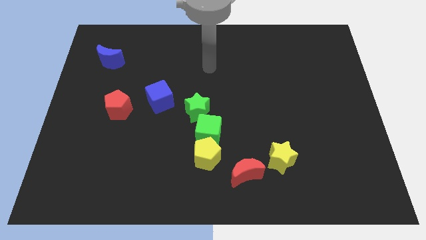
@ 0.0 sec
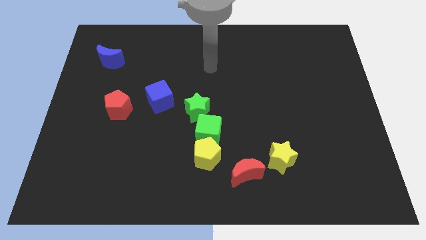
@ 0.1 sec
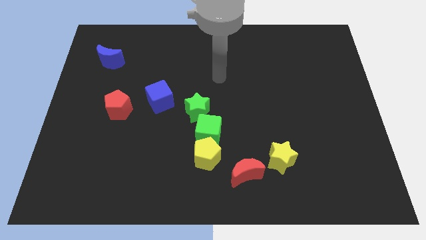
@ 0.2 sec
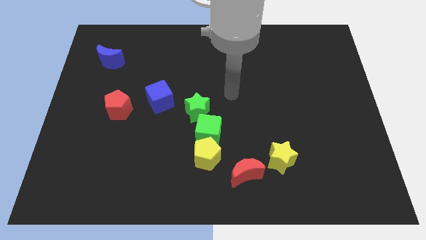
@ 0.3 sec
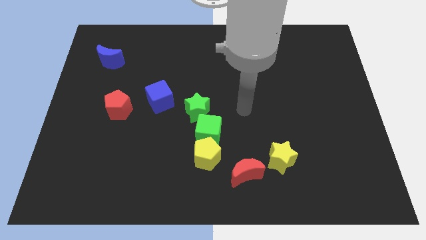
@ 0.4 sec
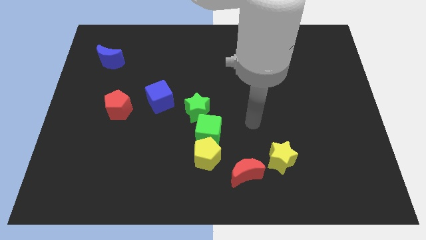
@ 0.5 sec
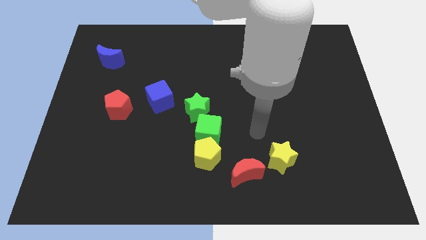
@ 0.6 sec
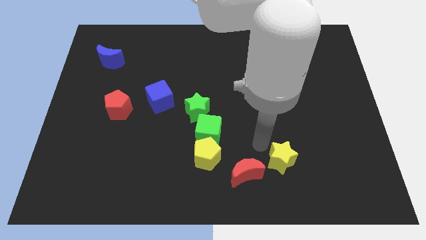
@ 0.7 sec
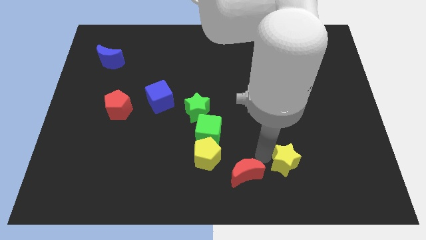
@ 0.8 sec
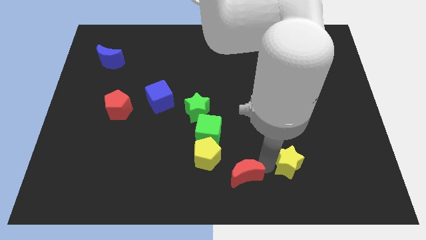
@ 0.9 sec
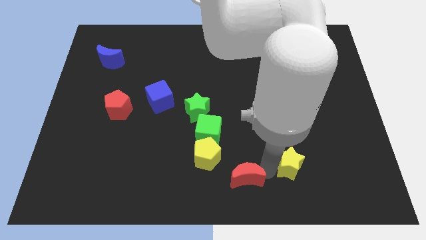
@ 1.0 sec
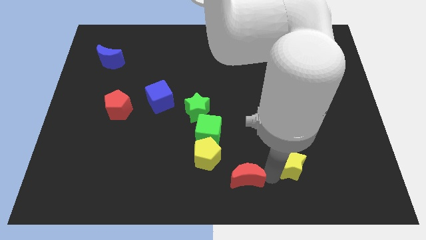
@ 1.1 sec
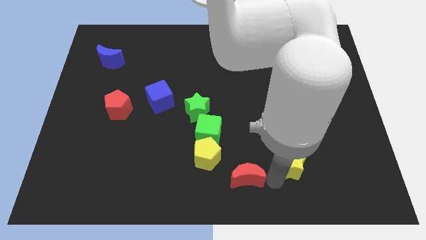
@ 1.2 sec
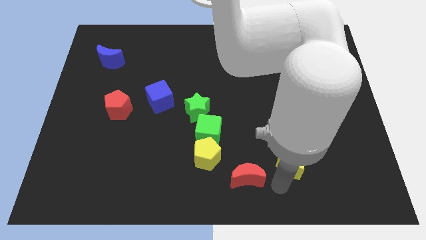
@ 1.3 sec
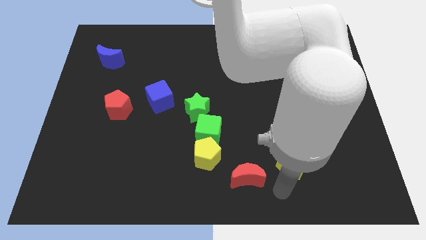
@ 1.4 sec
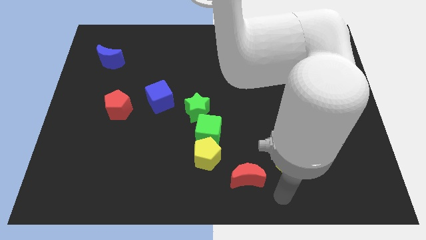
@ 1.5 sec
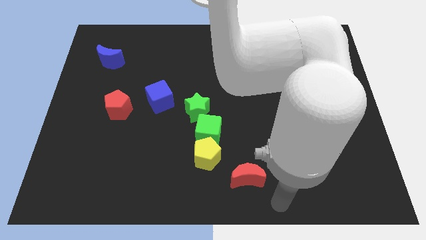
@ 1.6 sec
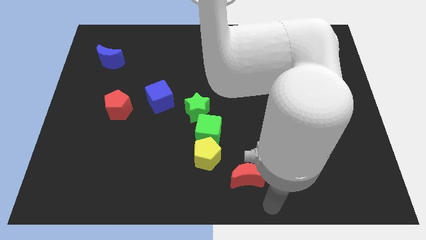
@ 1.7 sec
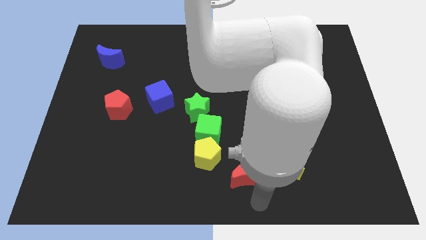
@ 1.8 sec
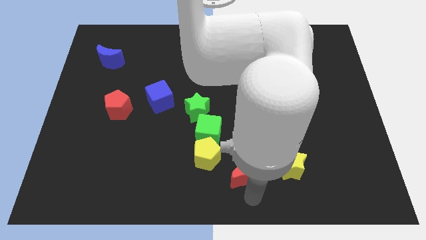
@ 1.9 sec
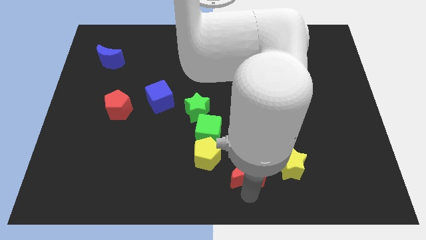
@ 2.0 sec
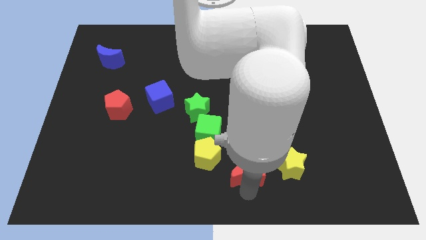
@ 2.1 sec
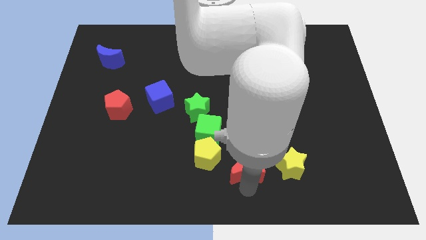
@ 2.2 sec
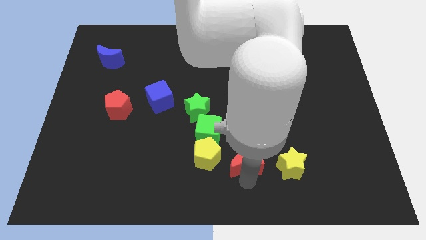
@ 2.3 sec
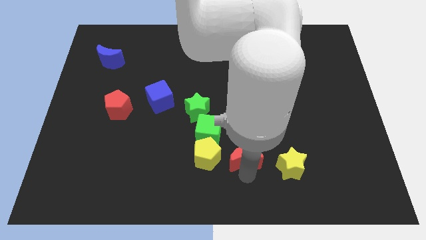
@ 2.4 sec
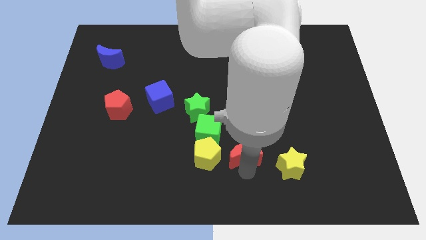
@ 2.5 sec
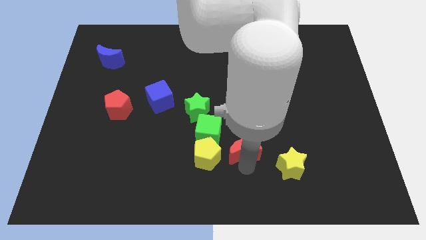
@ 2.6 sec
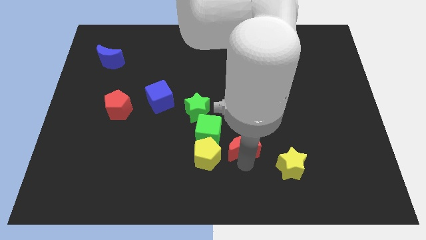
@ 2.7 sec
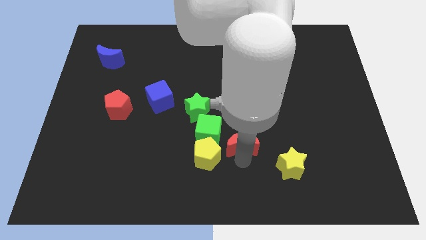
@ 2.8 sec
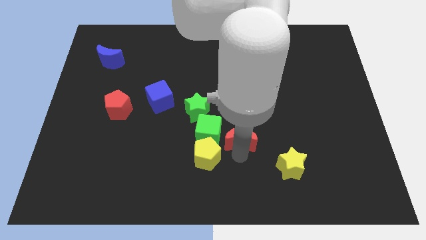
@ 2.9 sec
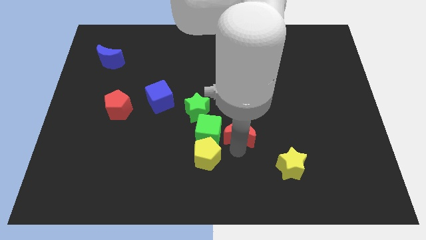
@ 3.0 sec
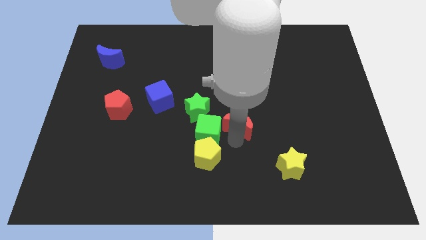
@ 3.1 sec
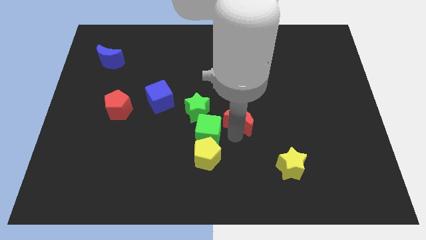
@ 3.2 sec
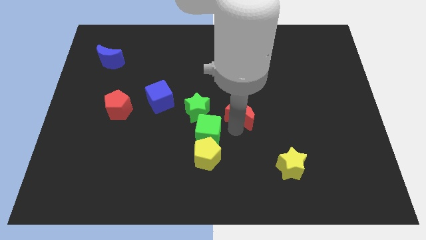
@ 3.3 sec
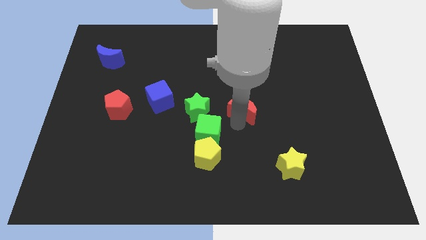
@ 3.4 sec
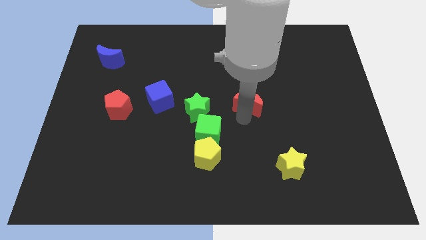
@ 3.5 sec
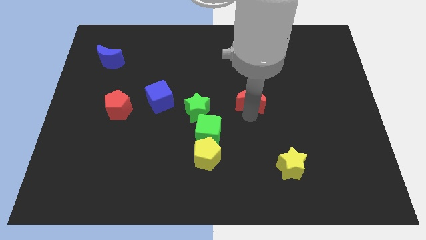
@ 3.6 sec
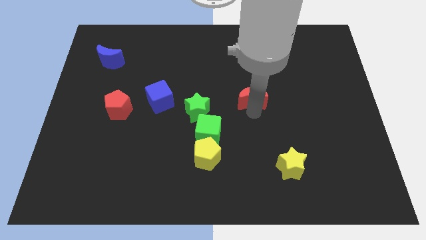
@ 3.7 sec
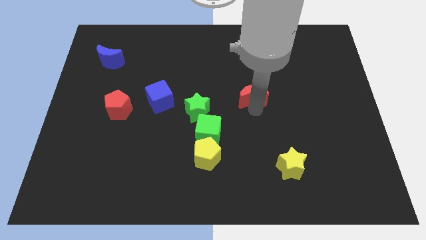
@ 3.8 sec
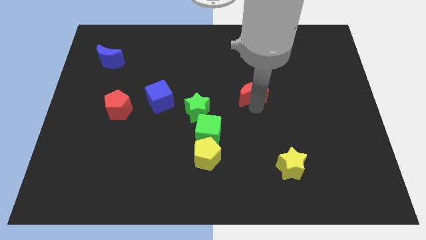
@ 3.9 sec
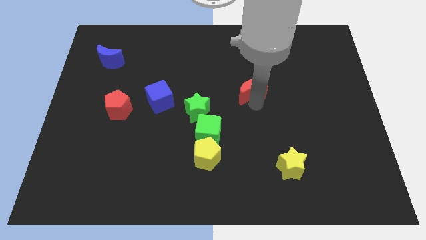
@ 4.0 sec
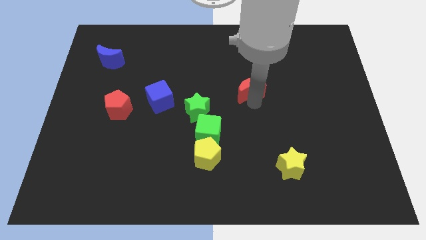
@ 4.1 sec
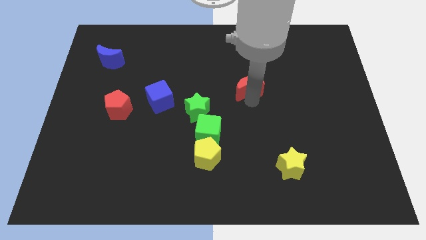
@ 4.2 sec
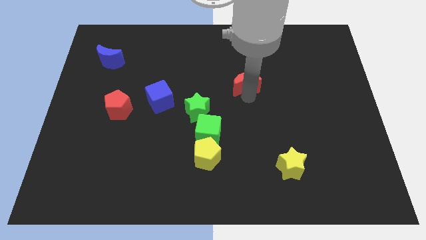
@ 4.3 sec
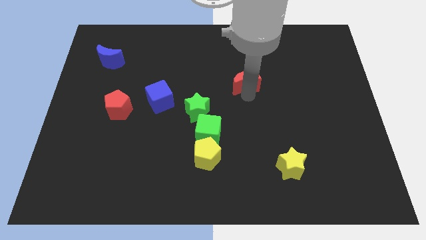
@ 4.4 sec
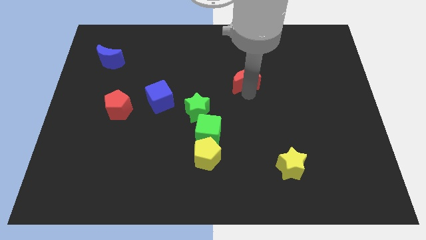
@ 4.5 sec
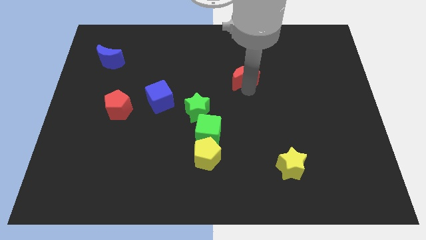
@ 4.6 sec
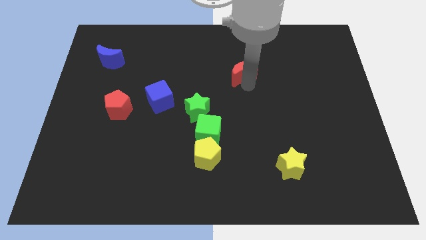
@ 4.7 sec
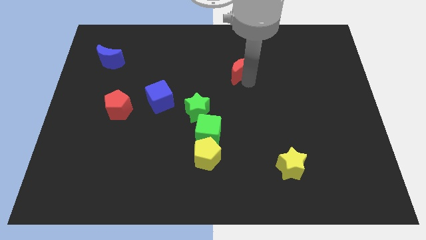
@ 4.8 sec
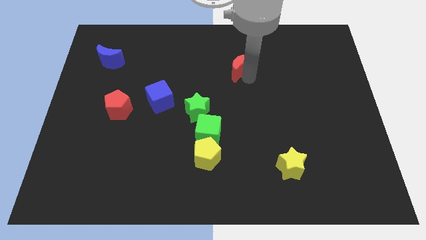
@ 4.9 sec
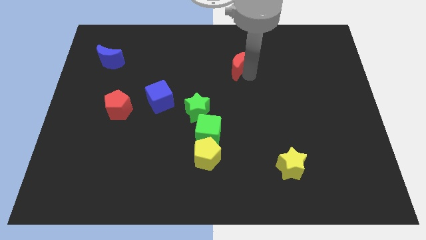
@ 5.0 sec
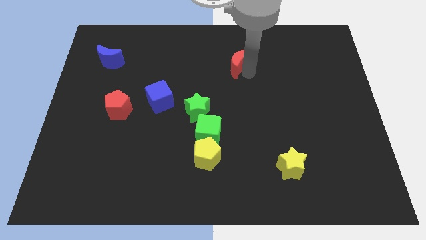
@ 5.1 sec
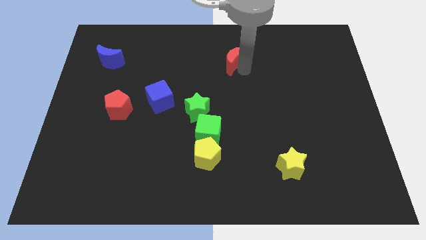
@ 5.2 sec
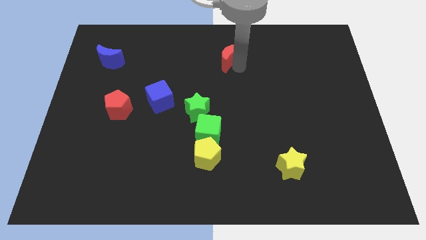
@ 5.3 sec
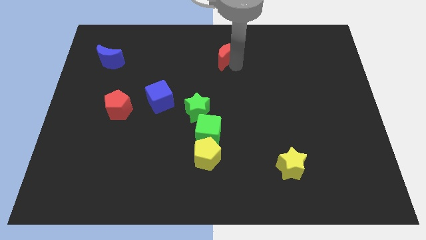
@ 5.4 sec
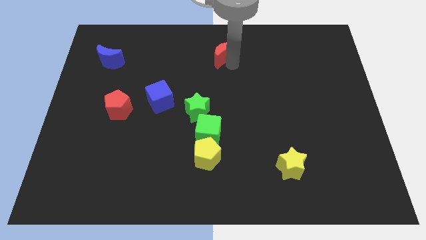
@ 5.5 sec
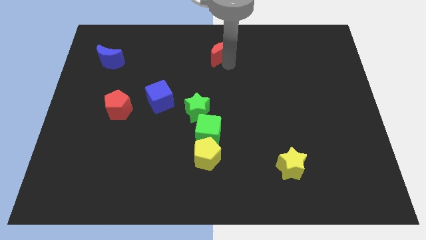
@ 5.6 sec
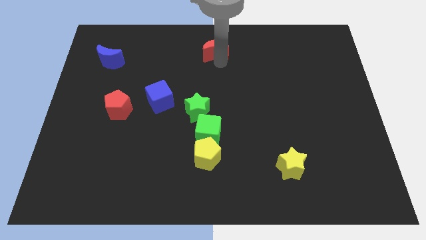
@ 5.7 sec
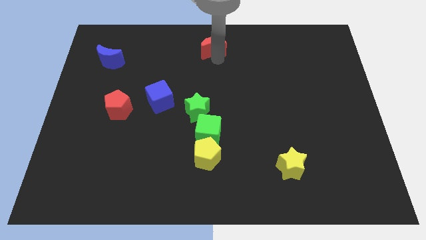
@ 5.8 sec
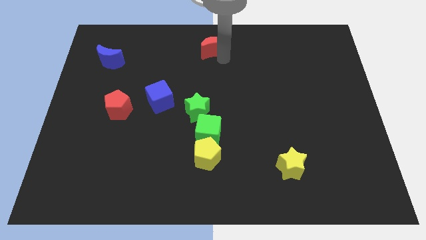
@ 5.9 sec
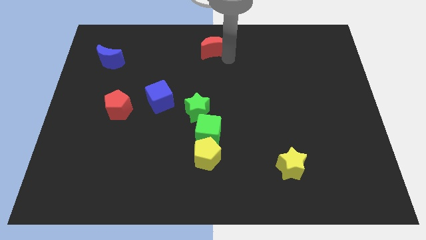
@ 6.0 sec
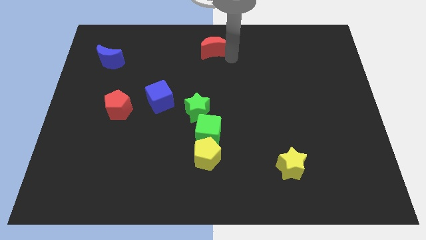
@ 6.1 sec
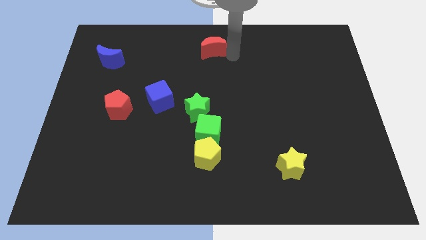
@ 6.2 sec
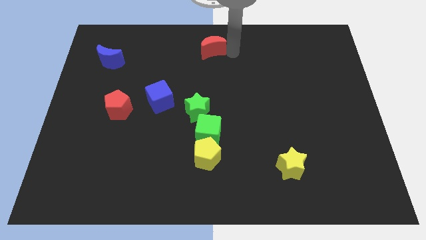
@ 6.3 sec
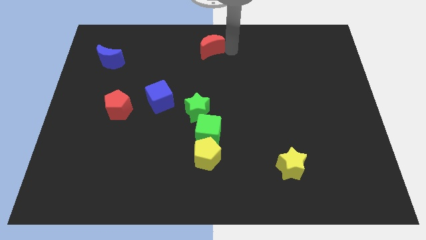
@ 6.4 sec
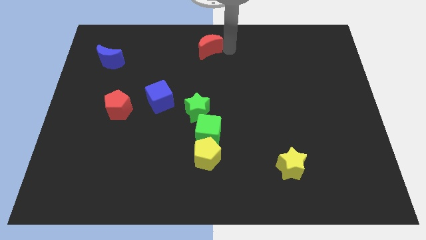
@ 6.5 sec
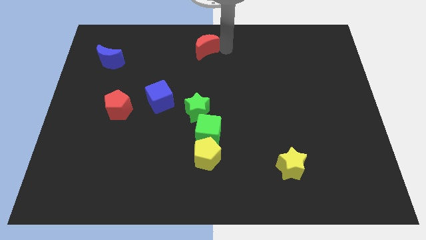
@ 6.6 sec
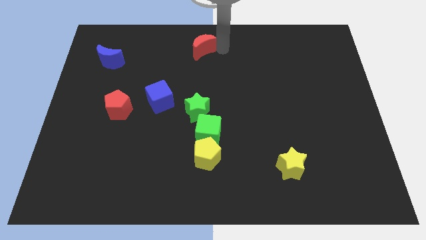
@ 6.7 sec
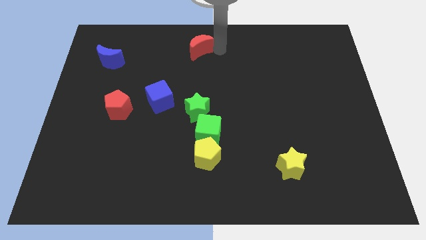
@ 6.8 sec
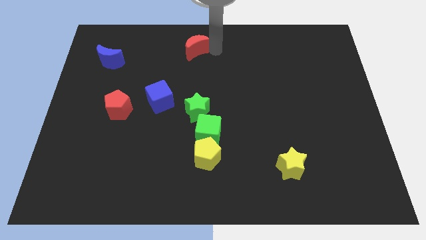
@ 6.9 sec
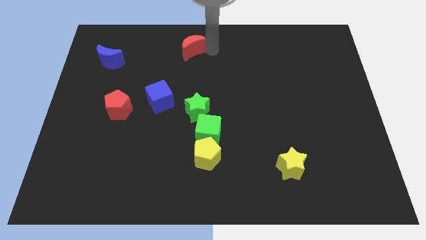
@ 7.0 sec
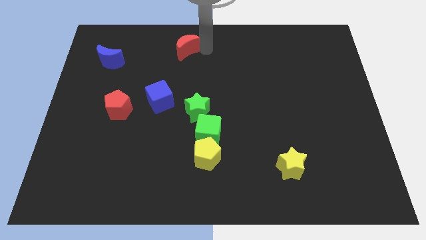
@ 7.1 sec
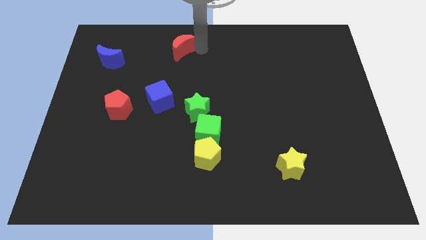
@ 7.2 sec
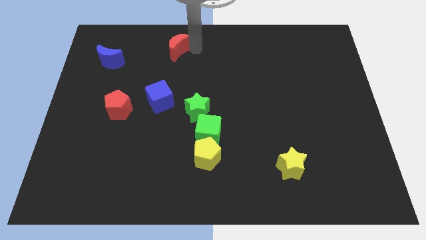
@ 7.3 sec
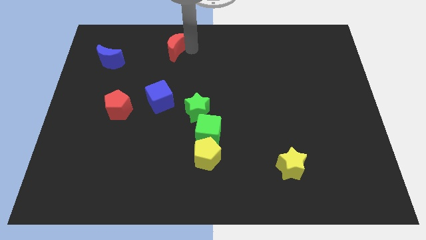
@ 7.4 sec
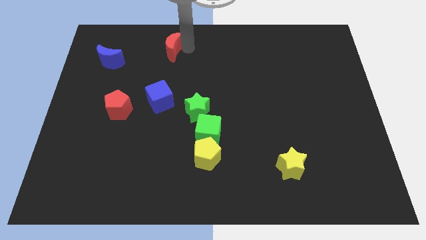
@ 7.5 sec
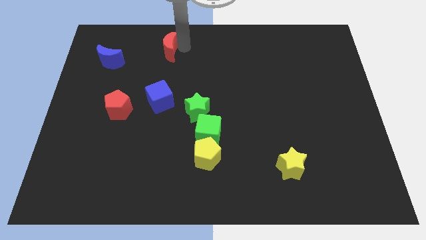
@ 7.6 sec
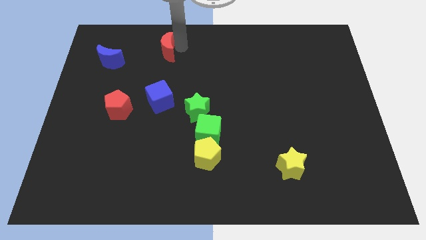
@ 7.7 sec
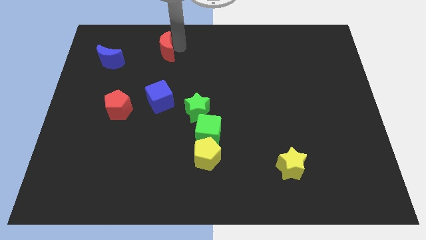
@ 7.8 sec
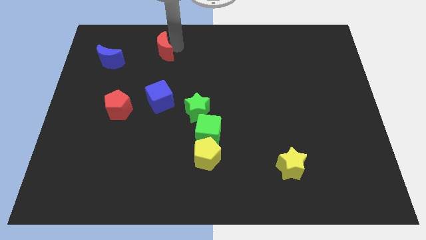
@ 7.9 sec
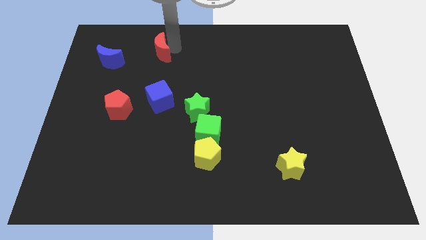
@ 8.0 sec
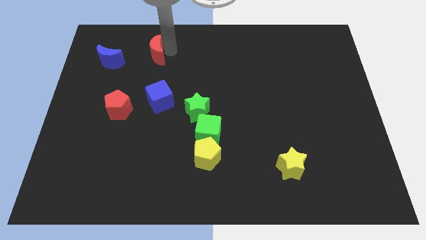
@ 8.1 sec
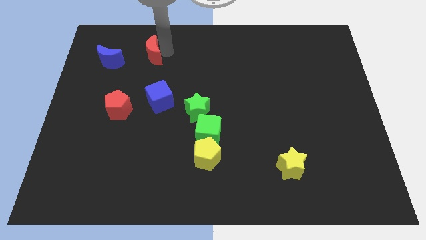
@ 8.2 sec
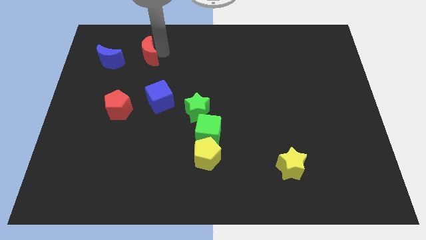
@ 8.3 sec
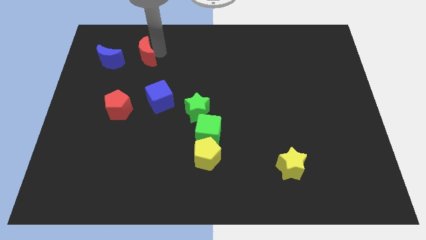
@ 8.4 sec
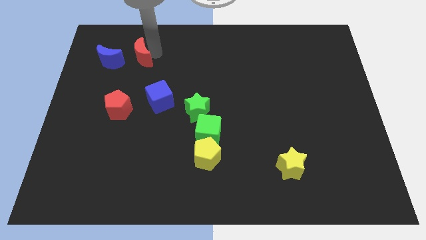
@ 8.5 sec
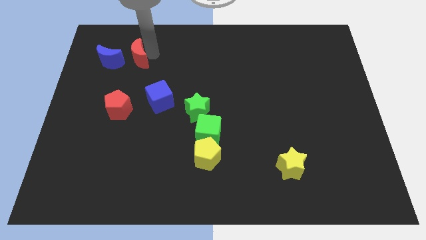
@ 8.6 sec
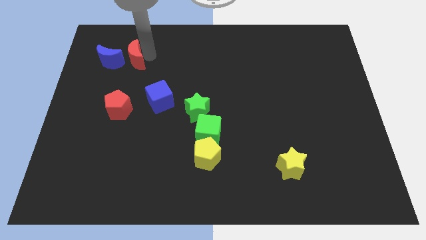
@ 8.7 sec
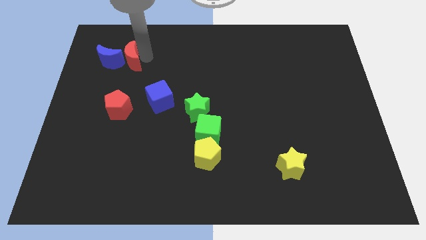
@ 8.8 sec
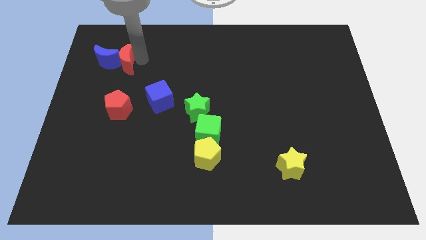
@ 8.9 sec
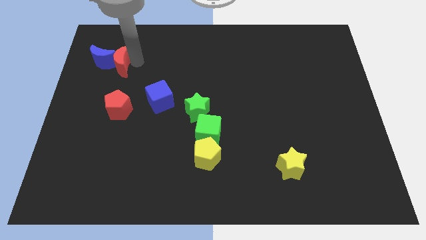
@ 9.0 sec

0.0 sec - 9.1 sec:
move the red moon to the blue moon
